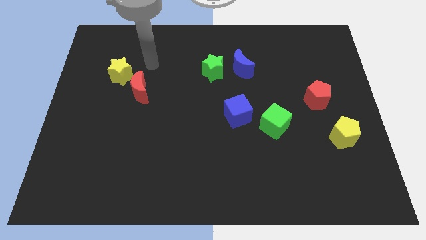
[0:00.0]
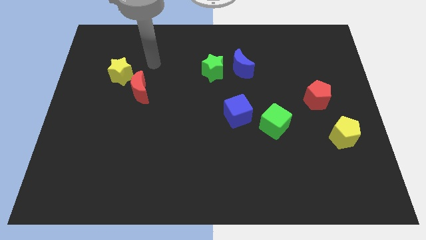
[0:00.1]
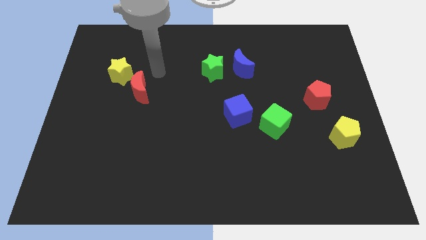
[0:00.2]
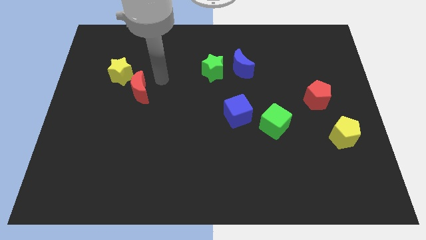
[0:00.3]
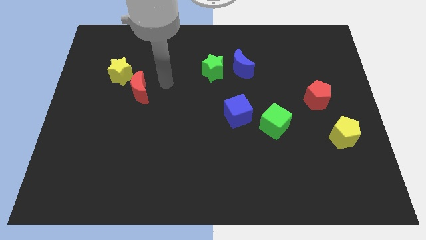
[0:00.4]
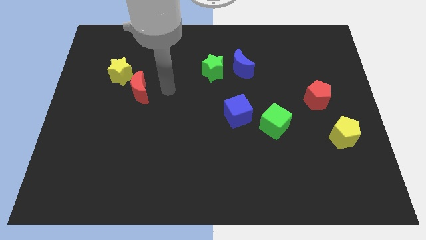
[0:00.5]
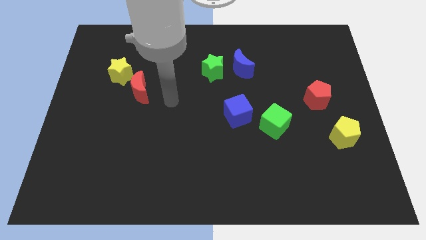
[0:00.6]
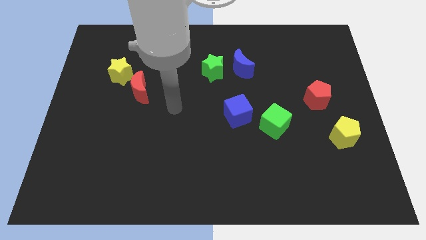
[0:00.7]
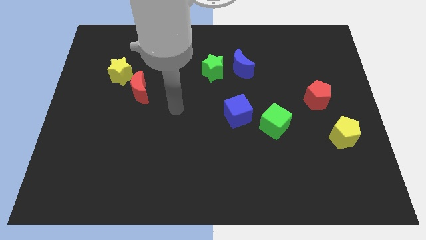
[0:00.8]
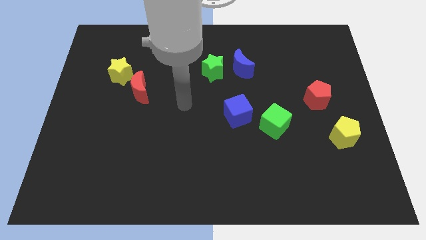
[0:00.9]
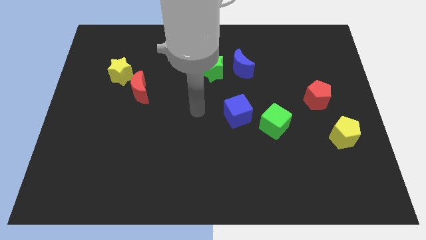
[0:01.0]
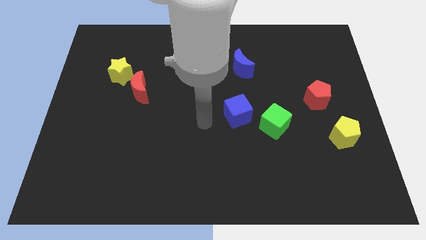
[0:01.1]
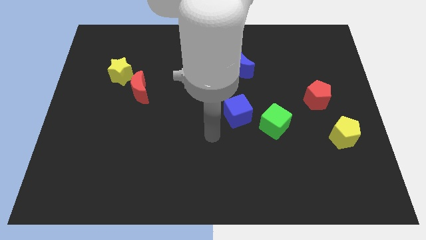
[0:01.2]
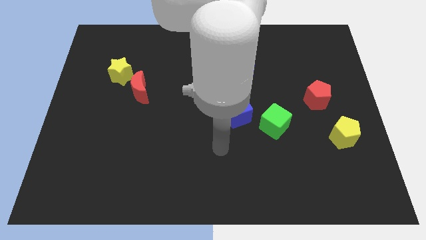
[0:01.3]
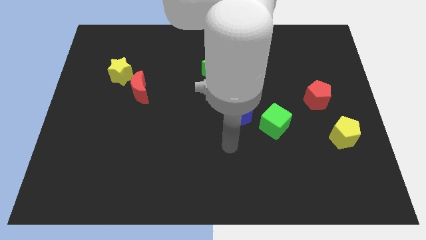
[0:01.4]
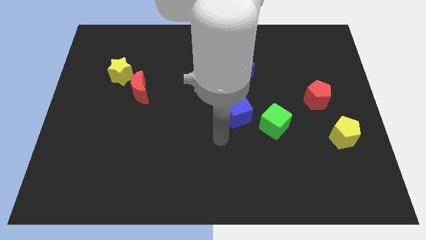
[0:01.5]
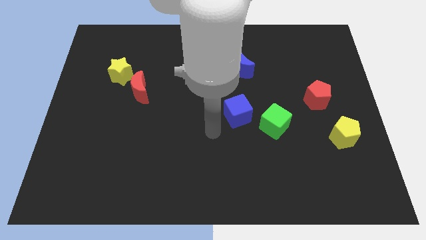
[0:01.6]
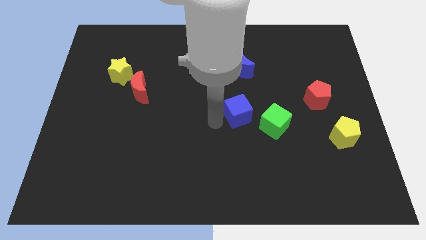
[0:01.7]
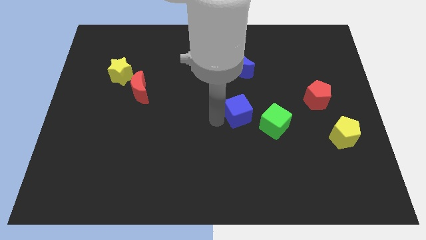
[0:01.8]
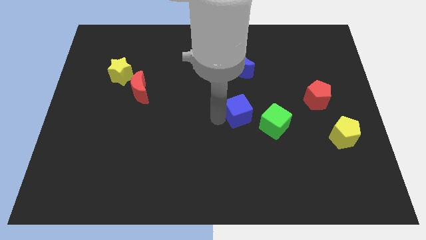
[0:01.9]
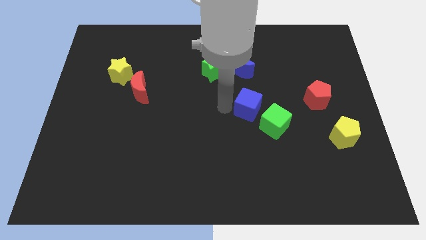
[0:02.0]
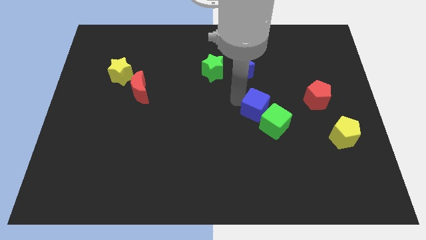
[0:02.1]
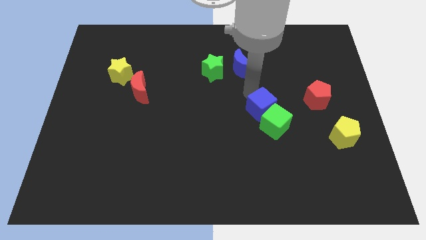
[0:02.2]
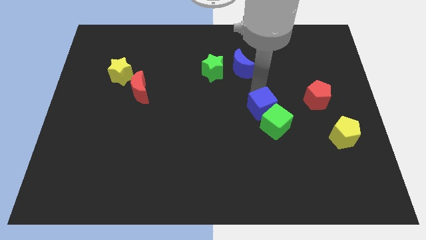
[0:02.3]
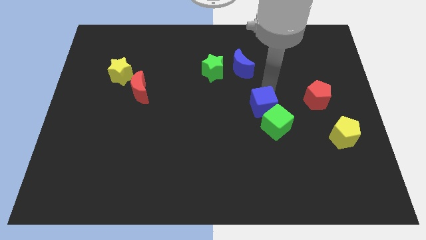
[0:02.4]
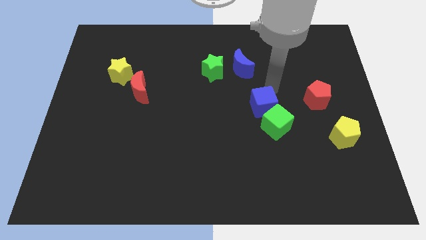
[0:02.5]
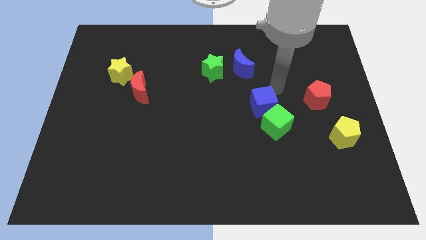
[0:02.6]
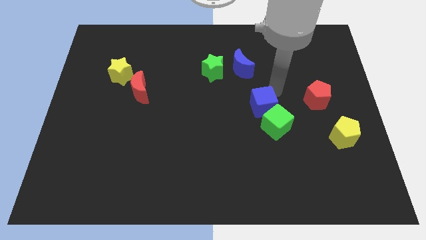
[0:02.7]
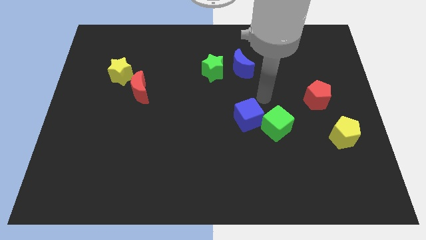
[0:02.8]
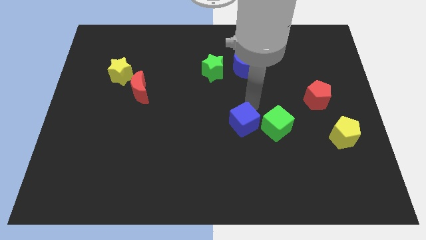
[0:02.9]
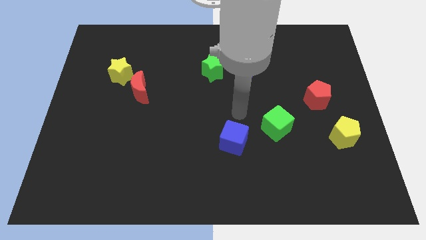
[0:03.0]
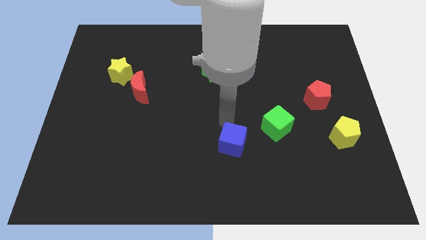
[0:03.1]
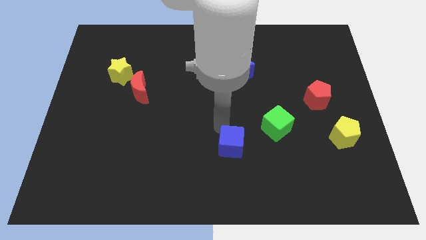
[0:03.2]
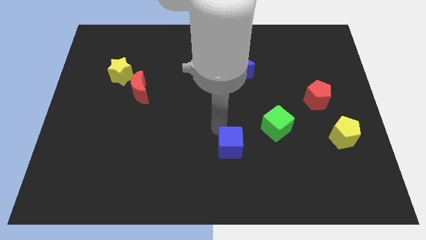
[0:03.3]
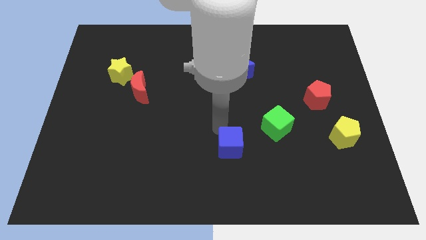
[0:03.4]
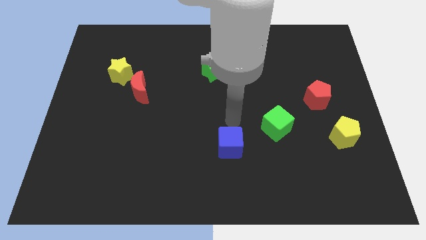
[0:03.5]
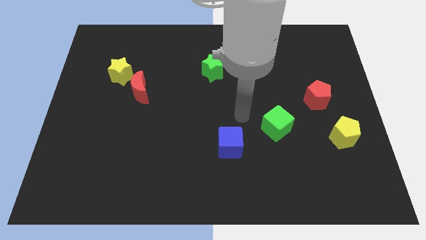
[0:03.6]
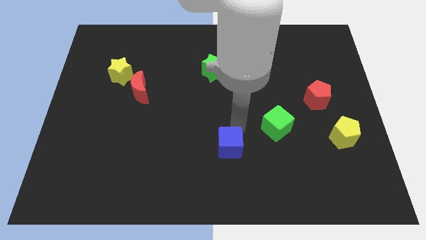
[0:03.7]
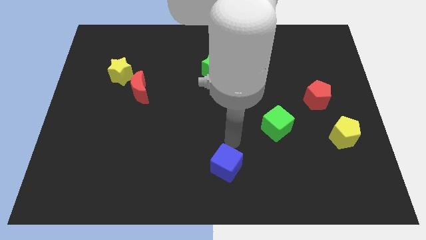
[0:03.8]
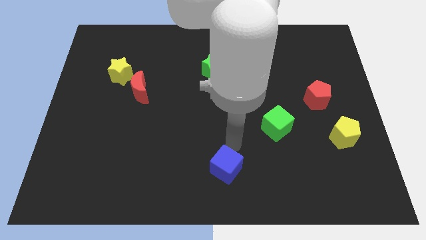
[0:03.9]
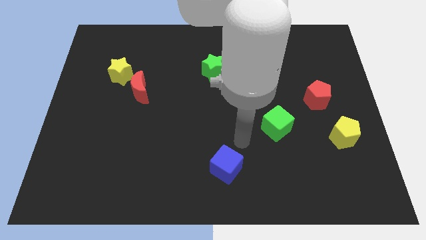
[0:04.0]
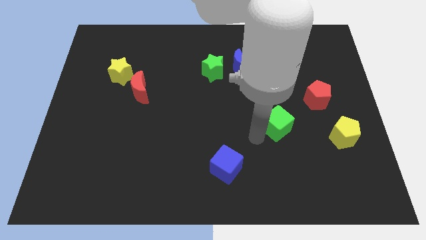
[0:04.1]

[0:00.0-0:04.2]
push the blue cube diagonally on the bottom left side of the green cube

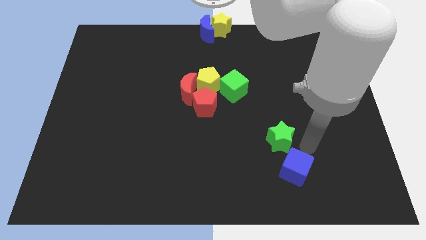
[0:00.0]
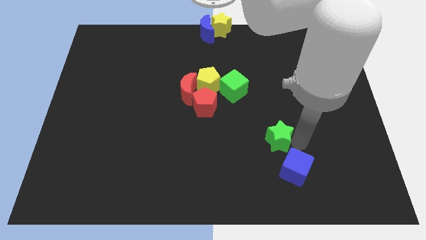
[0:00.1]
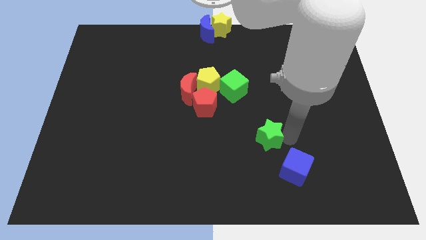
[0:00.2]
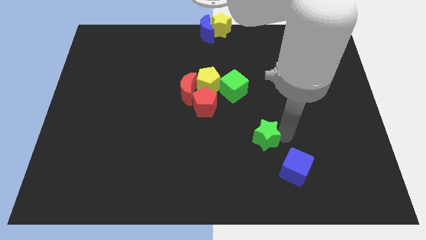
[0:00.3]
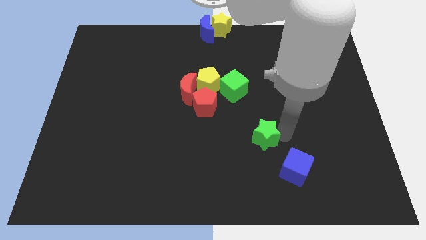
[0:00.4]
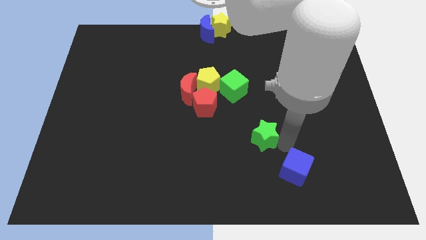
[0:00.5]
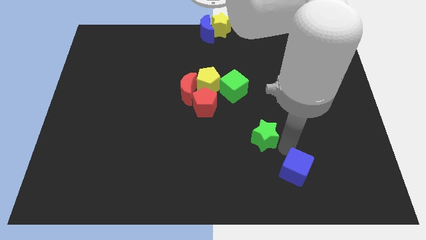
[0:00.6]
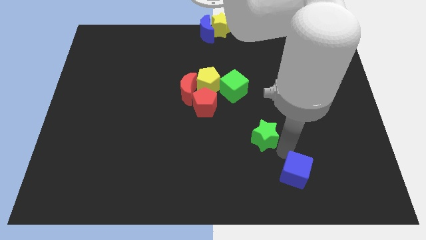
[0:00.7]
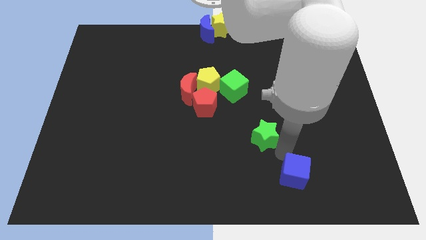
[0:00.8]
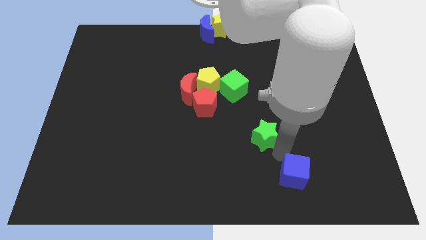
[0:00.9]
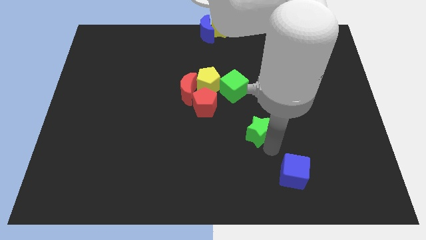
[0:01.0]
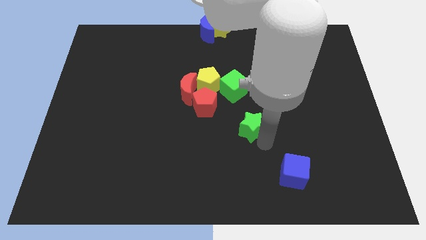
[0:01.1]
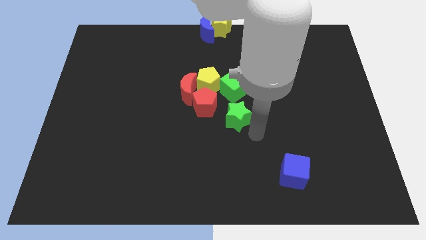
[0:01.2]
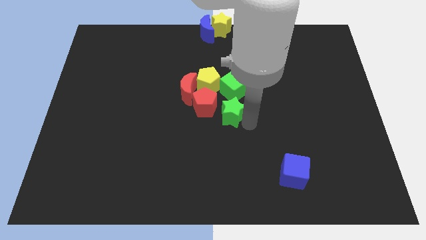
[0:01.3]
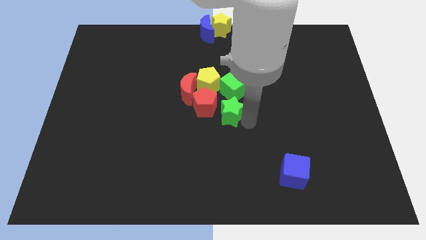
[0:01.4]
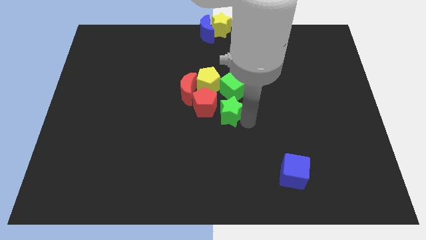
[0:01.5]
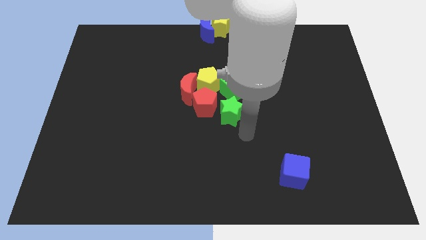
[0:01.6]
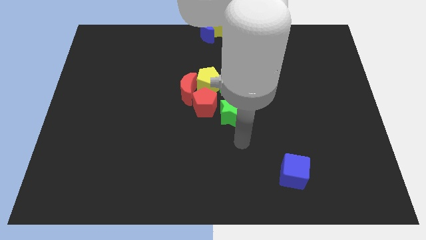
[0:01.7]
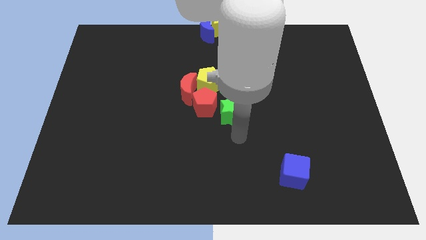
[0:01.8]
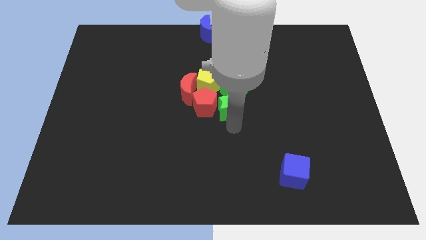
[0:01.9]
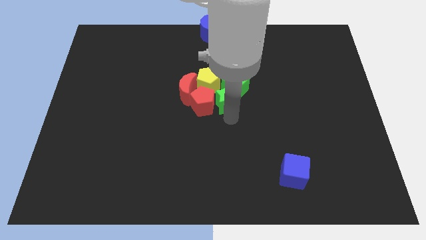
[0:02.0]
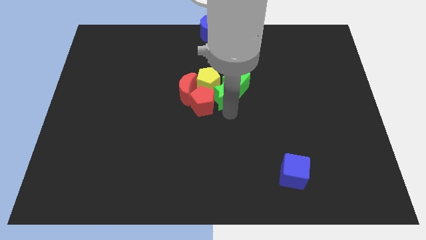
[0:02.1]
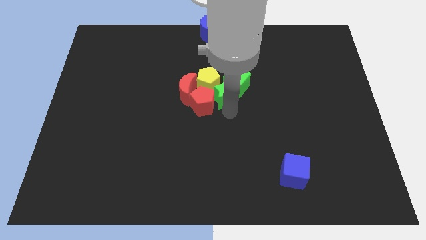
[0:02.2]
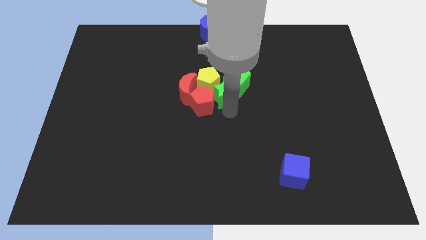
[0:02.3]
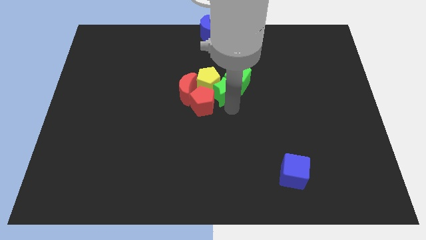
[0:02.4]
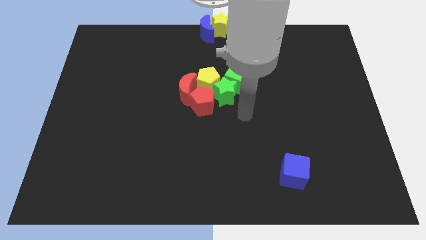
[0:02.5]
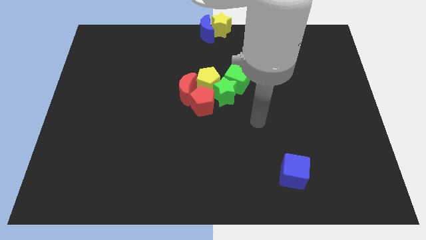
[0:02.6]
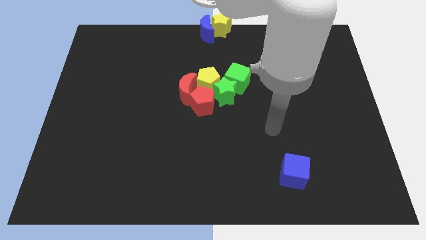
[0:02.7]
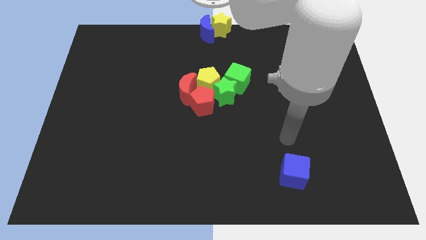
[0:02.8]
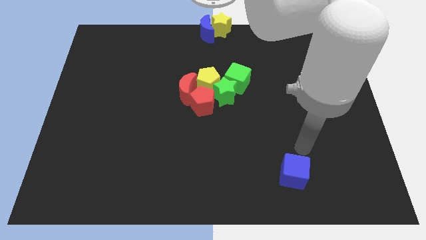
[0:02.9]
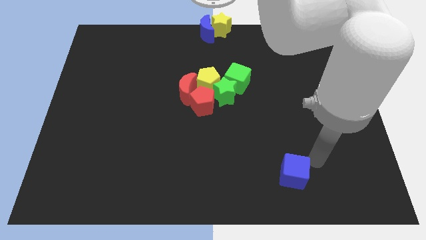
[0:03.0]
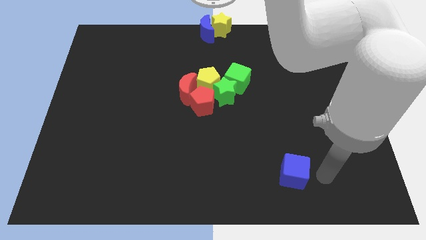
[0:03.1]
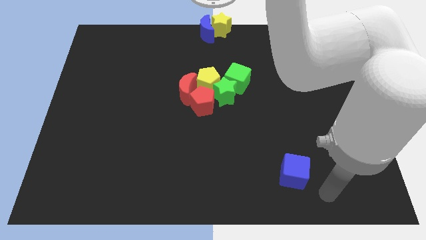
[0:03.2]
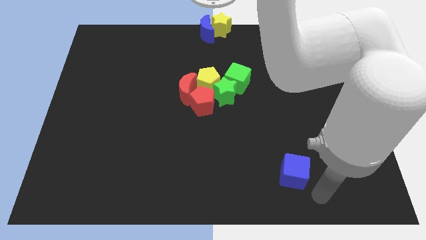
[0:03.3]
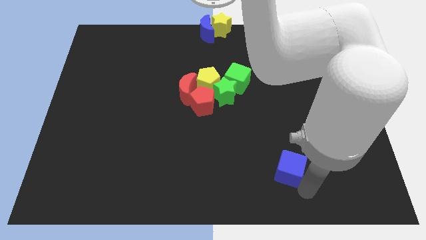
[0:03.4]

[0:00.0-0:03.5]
push the green star into the group of blocks

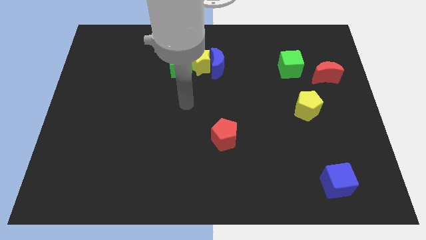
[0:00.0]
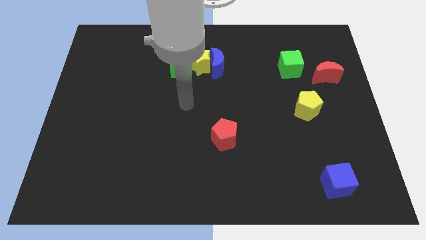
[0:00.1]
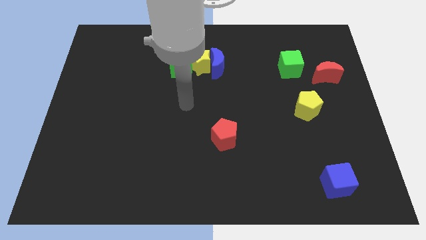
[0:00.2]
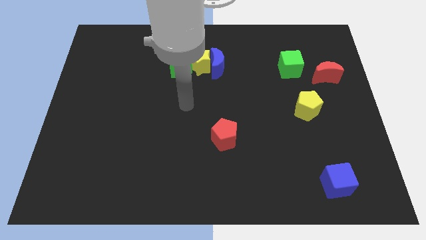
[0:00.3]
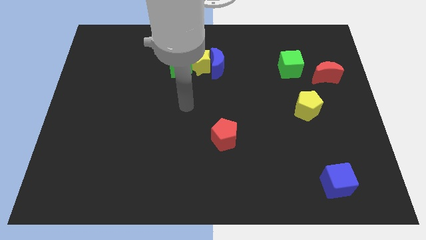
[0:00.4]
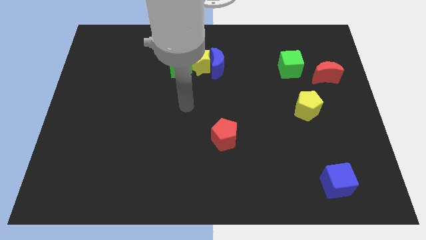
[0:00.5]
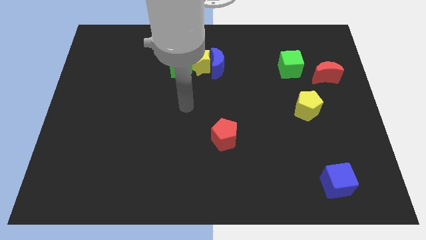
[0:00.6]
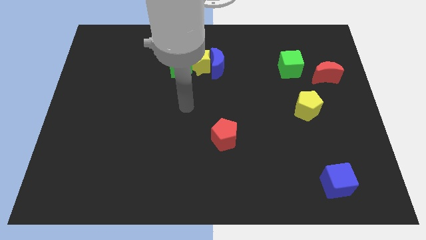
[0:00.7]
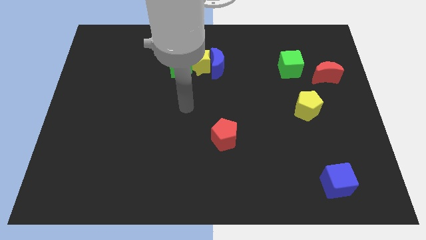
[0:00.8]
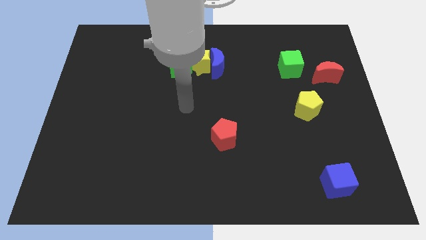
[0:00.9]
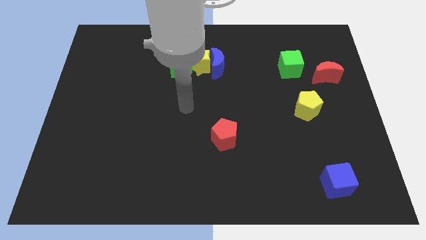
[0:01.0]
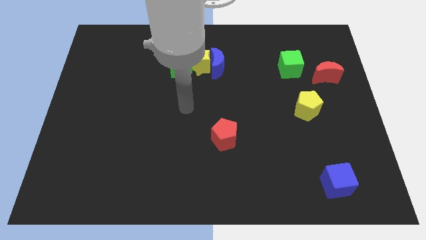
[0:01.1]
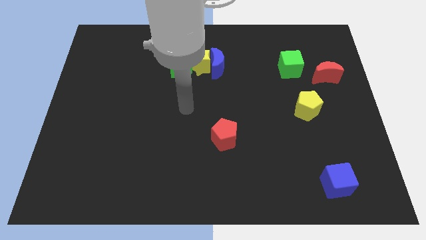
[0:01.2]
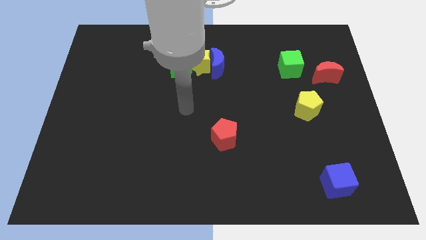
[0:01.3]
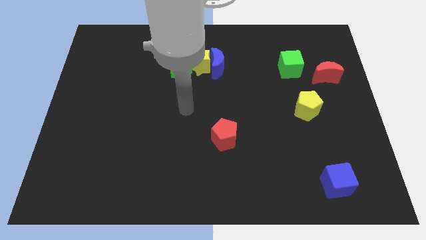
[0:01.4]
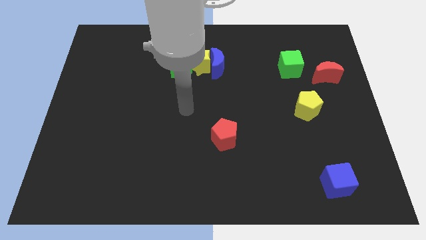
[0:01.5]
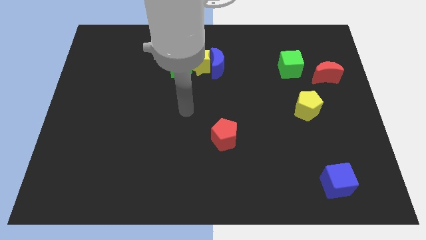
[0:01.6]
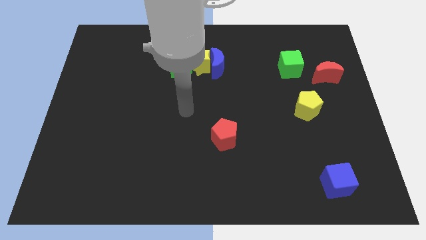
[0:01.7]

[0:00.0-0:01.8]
move your arm to the center of the board
